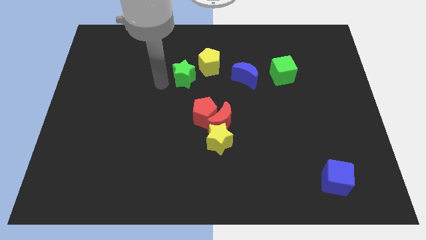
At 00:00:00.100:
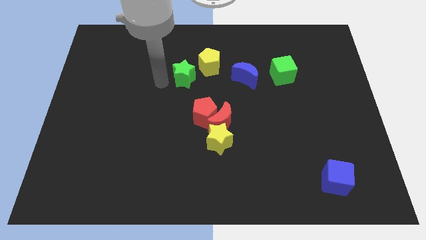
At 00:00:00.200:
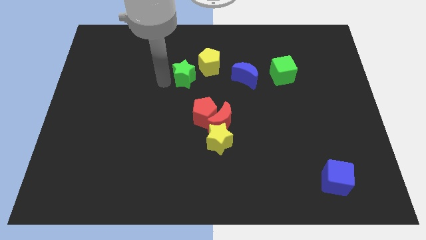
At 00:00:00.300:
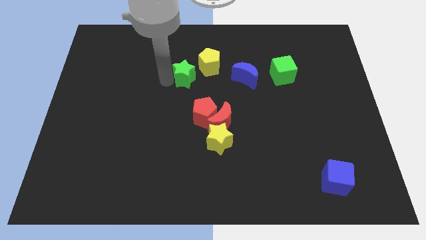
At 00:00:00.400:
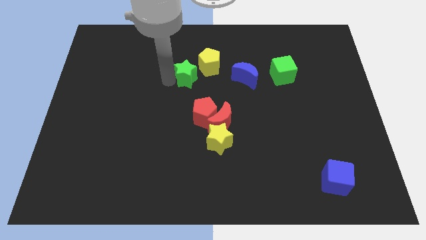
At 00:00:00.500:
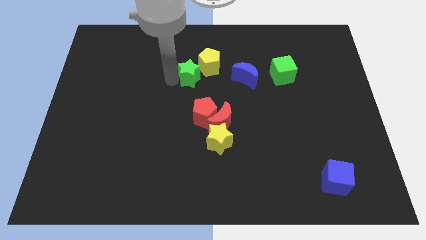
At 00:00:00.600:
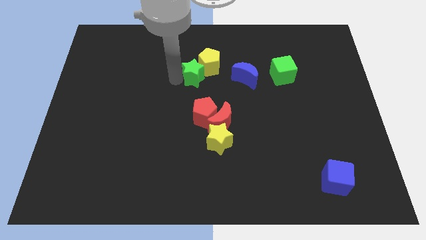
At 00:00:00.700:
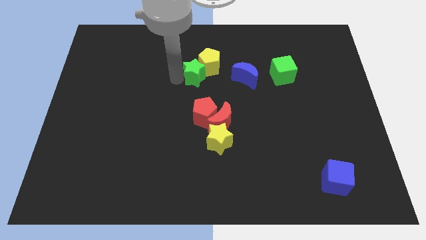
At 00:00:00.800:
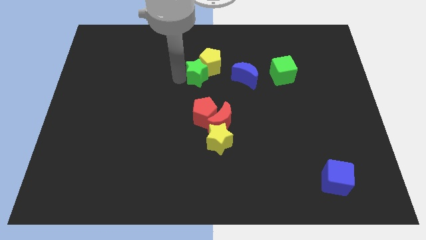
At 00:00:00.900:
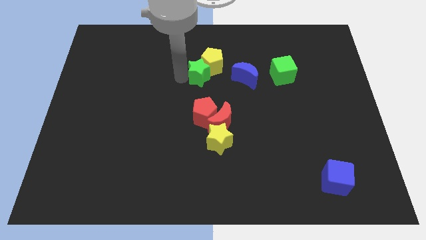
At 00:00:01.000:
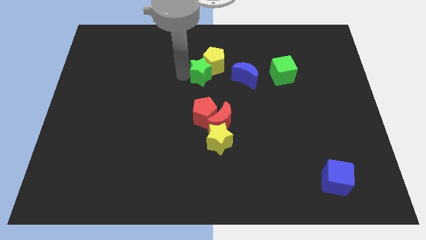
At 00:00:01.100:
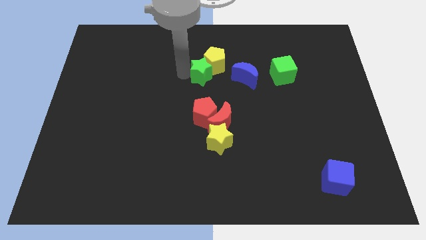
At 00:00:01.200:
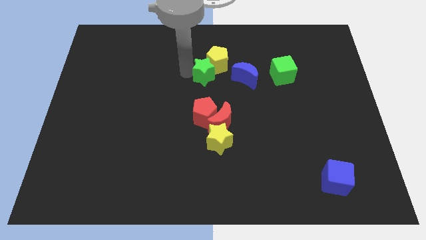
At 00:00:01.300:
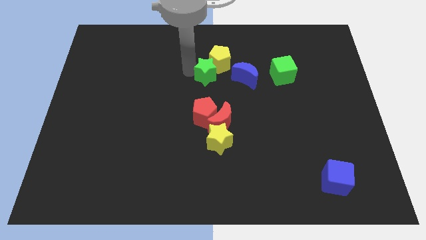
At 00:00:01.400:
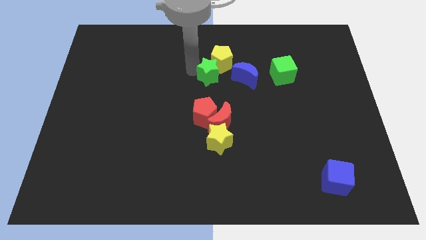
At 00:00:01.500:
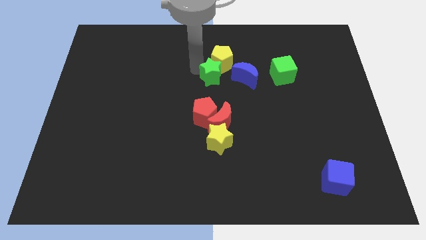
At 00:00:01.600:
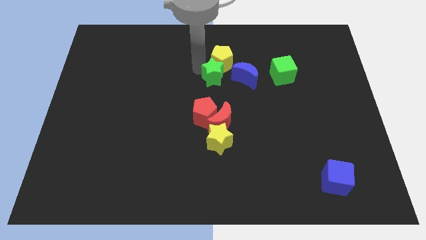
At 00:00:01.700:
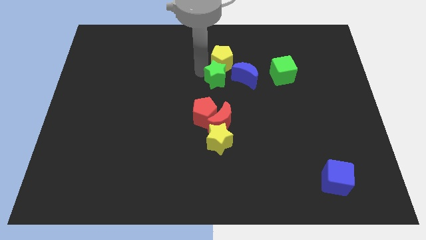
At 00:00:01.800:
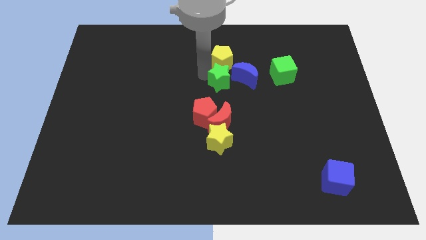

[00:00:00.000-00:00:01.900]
move the green star below to the yellow pentagon

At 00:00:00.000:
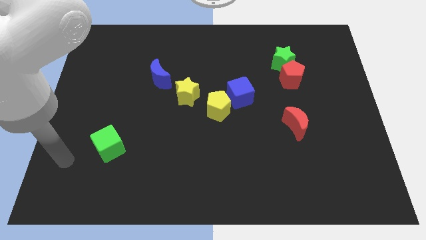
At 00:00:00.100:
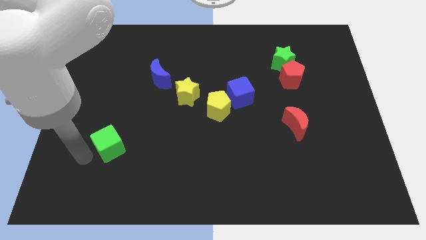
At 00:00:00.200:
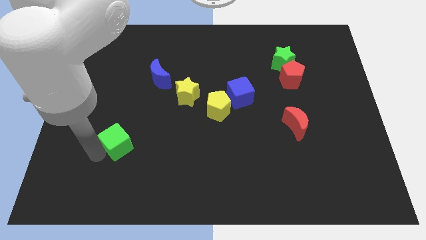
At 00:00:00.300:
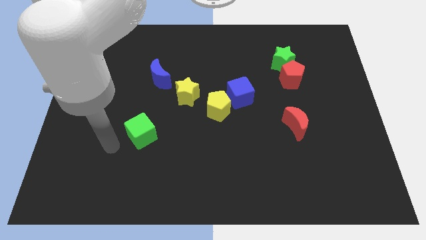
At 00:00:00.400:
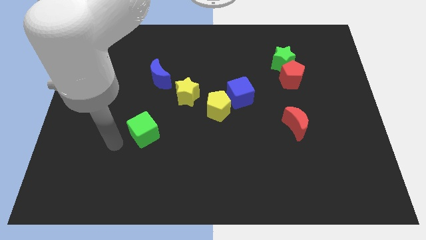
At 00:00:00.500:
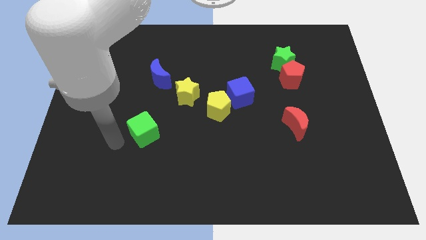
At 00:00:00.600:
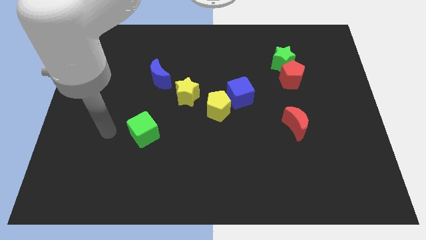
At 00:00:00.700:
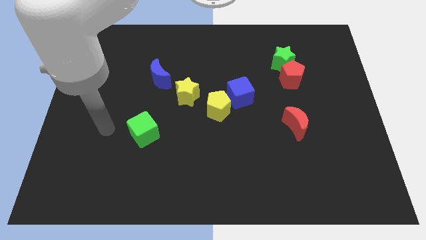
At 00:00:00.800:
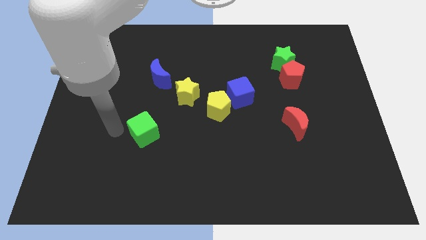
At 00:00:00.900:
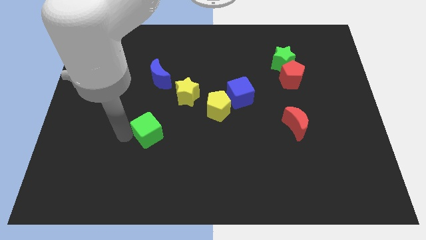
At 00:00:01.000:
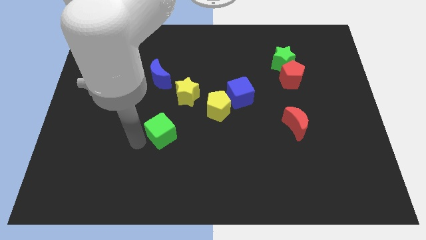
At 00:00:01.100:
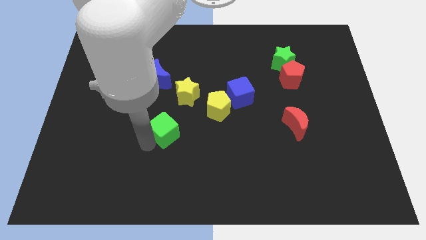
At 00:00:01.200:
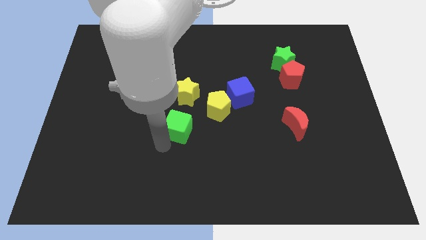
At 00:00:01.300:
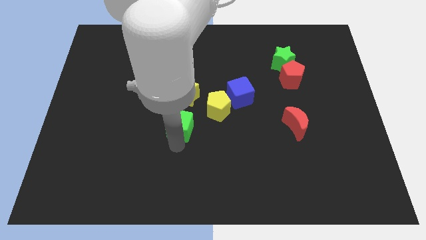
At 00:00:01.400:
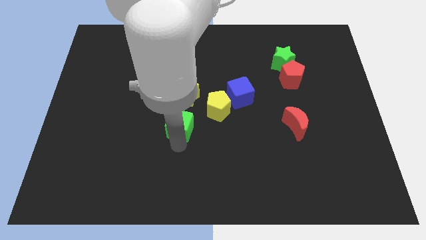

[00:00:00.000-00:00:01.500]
push the green cube down to the yellow star

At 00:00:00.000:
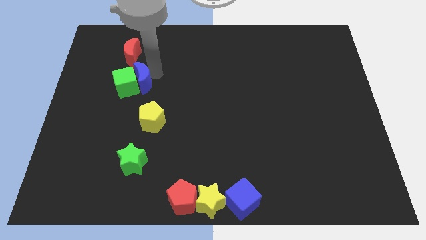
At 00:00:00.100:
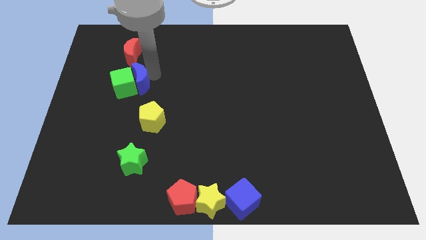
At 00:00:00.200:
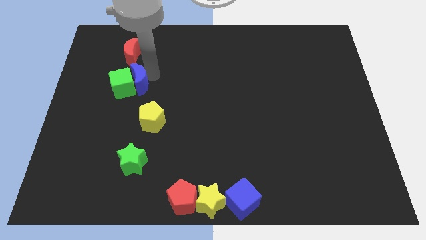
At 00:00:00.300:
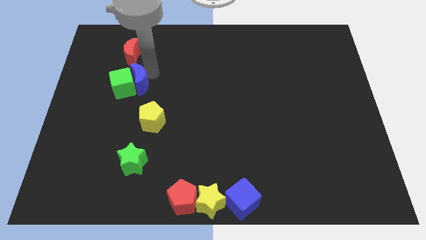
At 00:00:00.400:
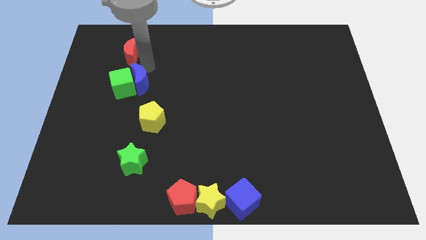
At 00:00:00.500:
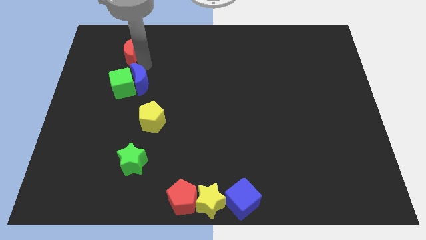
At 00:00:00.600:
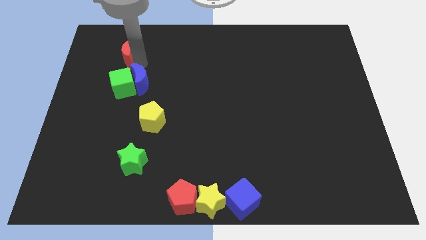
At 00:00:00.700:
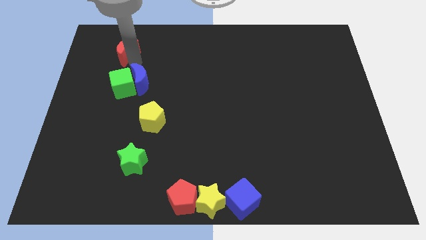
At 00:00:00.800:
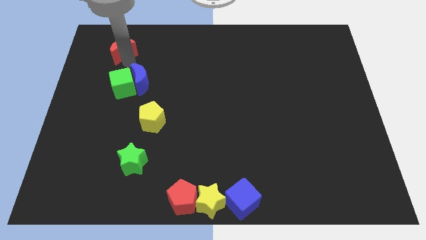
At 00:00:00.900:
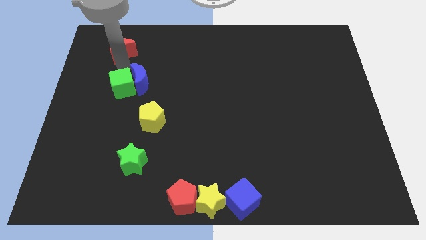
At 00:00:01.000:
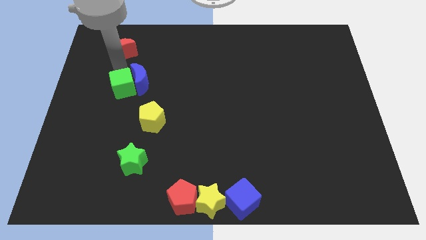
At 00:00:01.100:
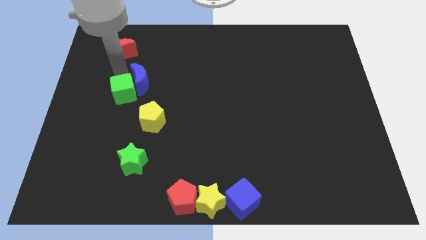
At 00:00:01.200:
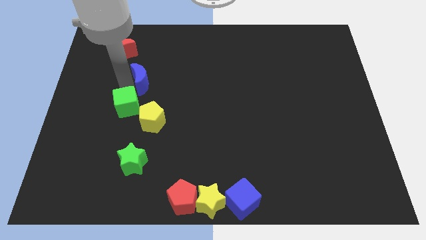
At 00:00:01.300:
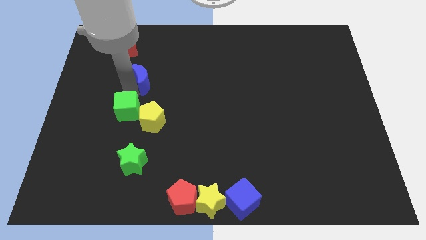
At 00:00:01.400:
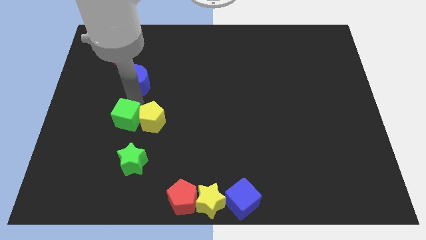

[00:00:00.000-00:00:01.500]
separate the green cube from blue moon

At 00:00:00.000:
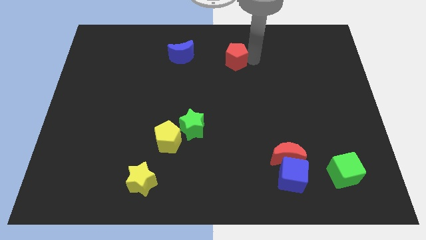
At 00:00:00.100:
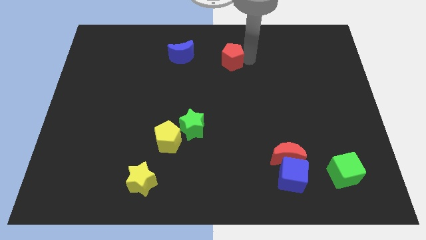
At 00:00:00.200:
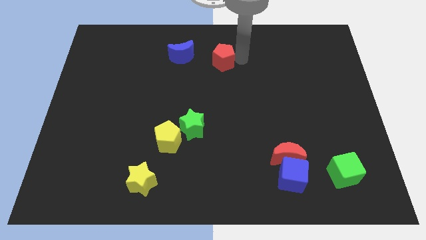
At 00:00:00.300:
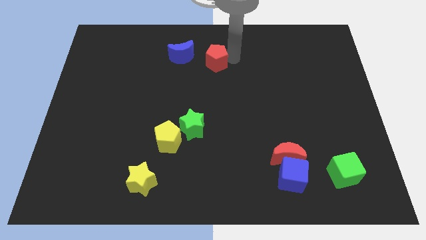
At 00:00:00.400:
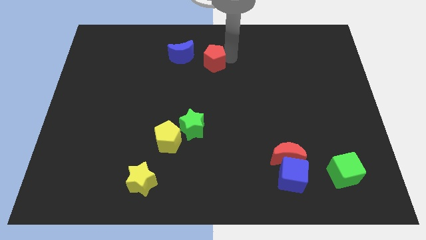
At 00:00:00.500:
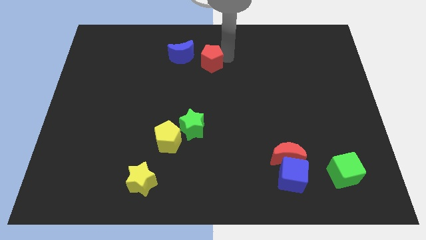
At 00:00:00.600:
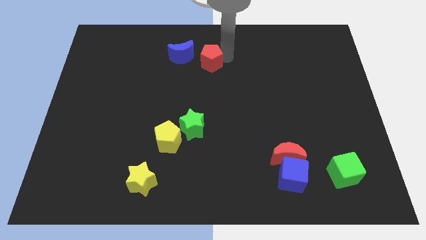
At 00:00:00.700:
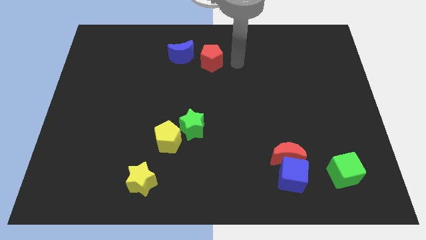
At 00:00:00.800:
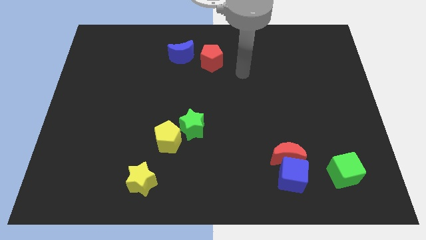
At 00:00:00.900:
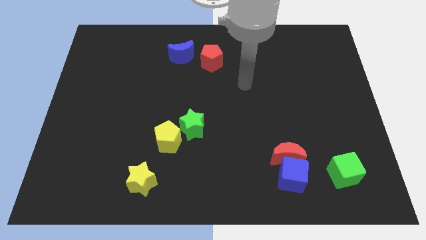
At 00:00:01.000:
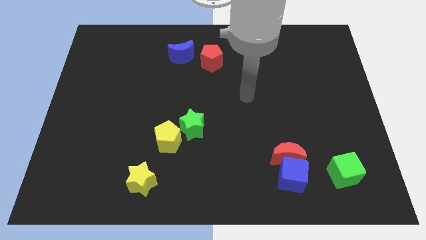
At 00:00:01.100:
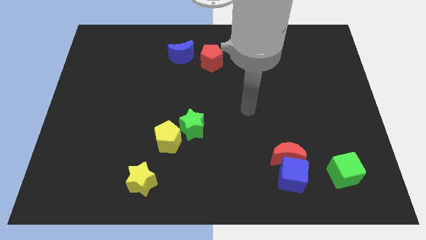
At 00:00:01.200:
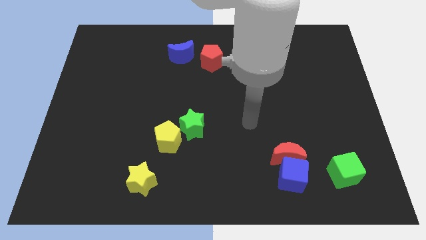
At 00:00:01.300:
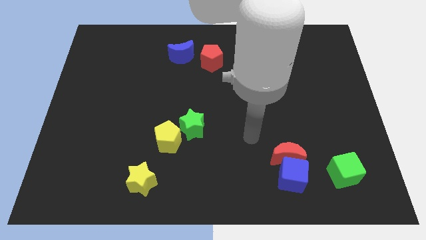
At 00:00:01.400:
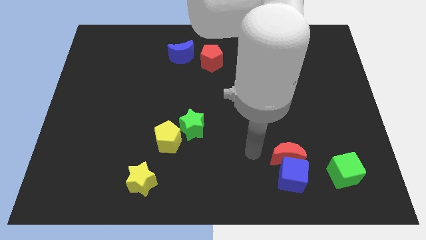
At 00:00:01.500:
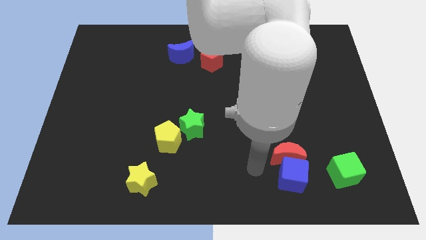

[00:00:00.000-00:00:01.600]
place the red pentagon to the right side of blue moon

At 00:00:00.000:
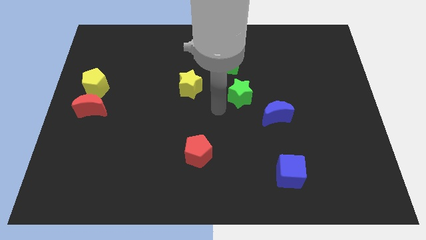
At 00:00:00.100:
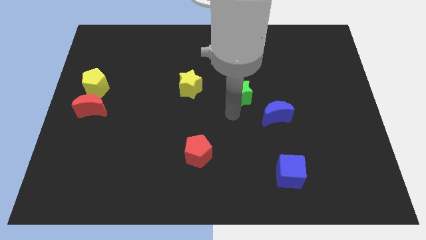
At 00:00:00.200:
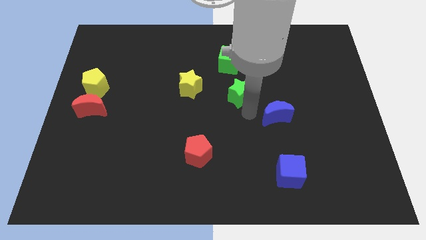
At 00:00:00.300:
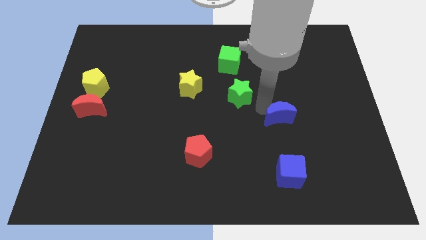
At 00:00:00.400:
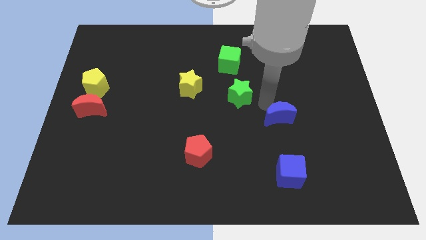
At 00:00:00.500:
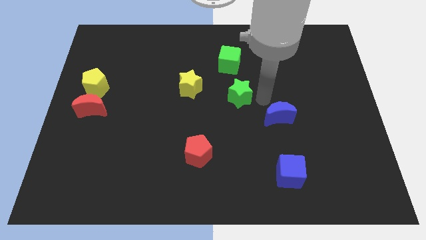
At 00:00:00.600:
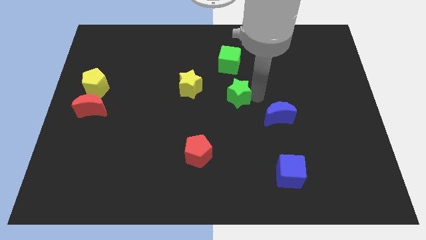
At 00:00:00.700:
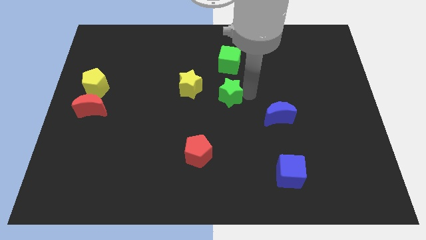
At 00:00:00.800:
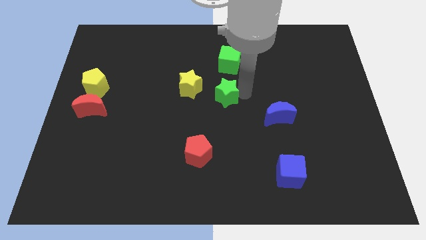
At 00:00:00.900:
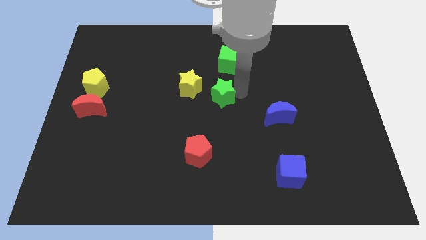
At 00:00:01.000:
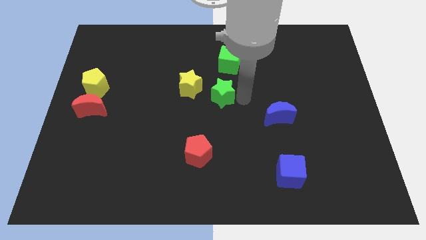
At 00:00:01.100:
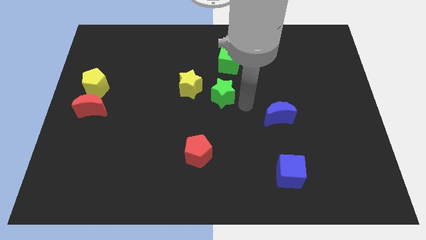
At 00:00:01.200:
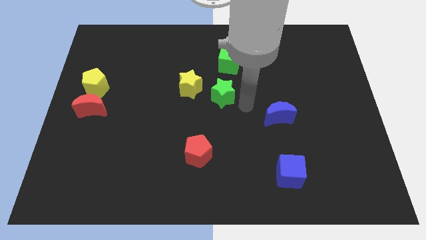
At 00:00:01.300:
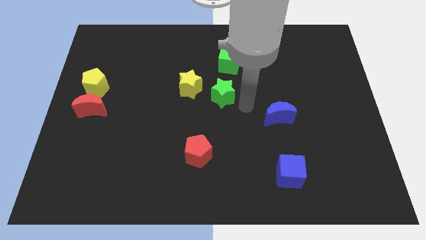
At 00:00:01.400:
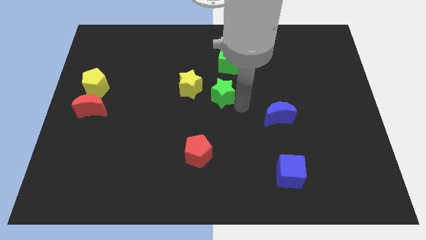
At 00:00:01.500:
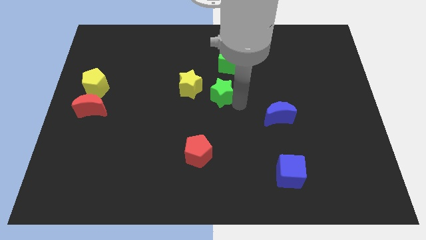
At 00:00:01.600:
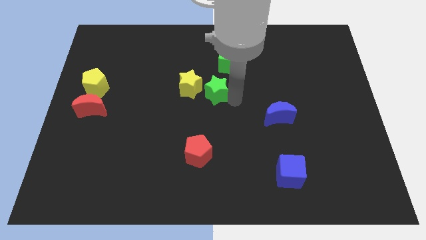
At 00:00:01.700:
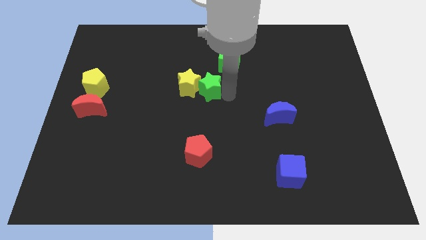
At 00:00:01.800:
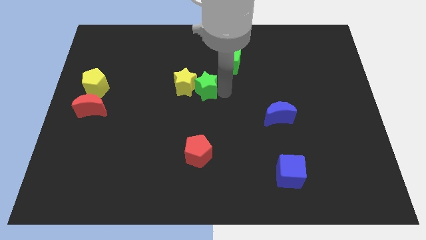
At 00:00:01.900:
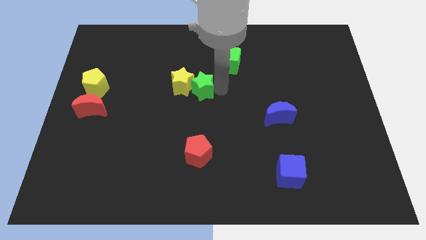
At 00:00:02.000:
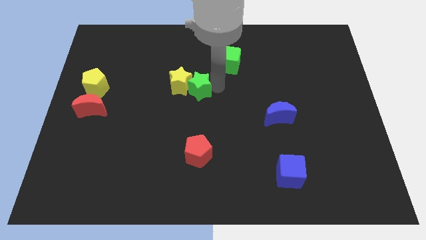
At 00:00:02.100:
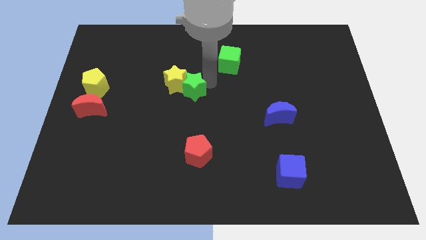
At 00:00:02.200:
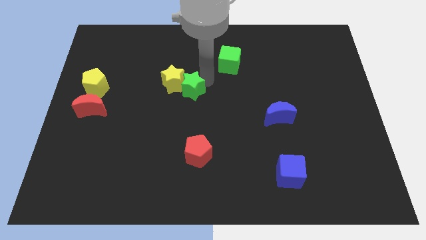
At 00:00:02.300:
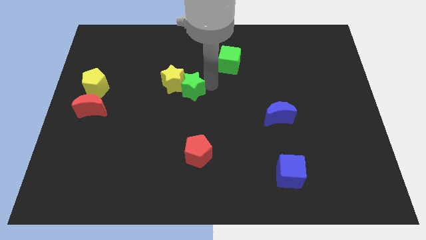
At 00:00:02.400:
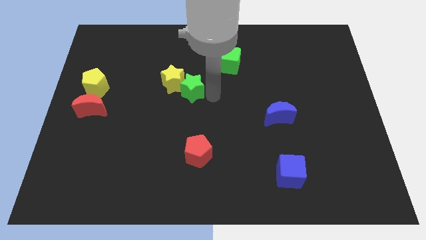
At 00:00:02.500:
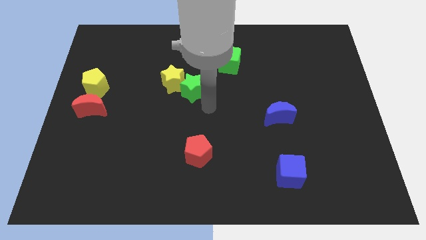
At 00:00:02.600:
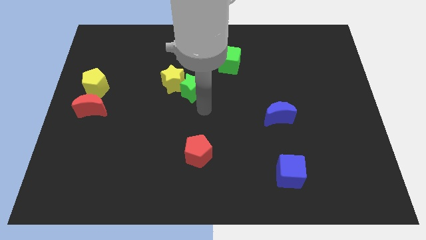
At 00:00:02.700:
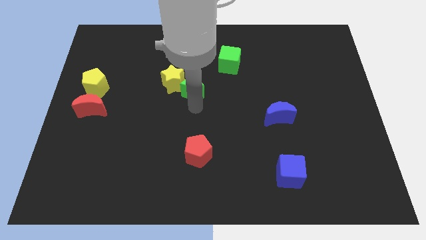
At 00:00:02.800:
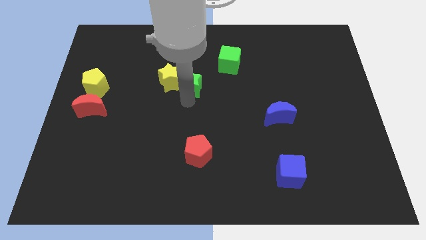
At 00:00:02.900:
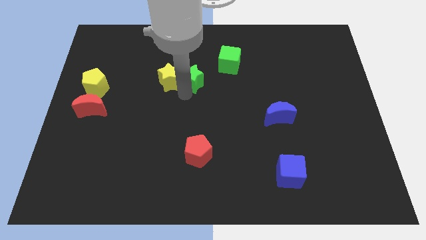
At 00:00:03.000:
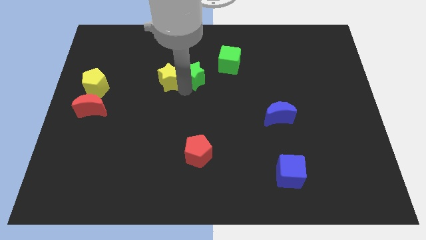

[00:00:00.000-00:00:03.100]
push green star in to yellow star
